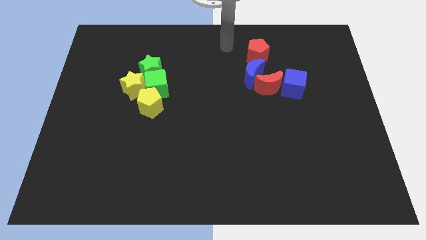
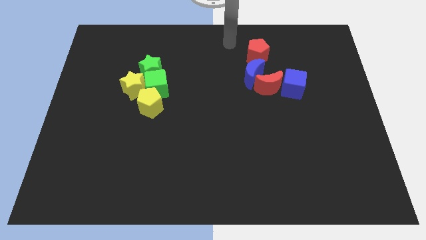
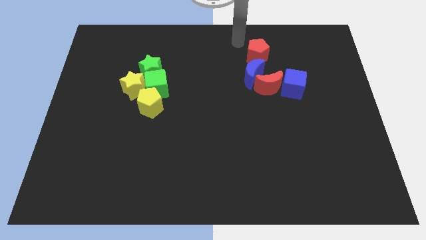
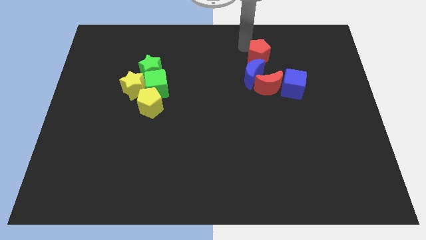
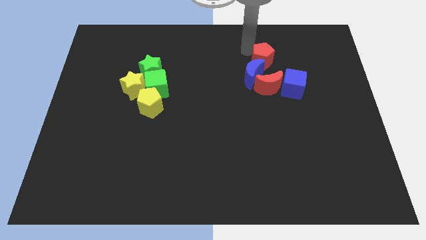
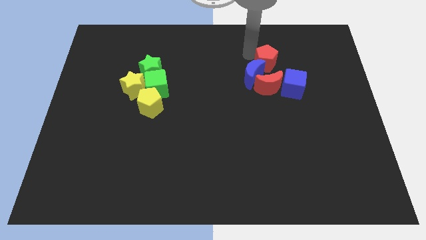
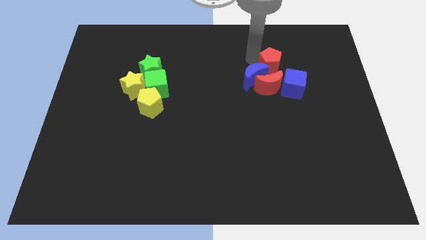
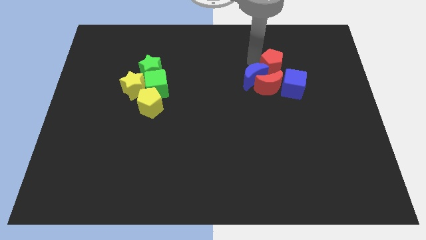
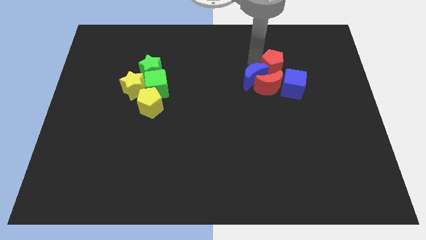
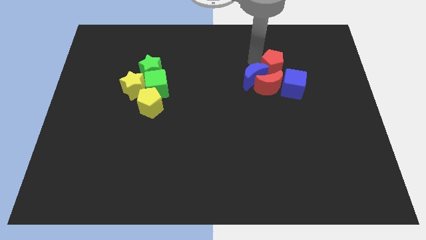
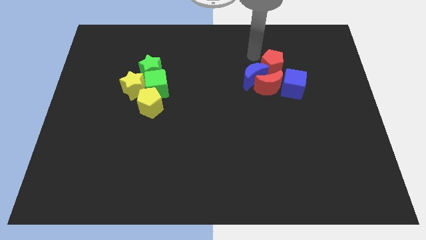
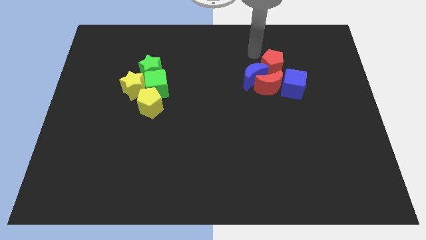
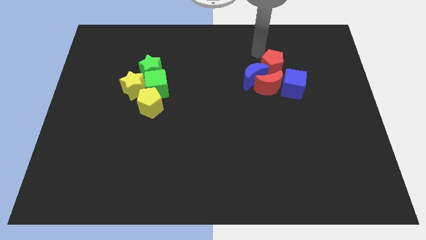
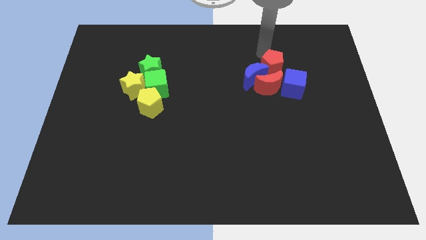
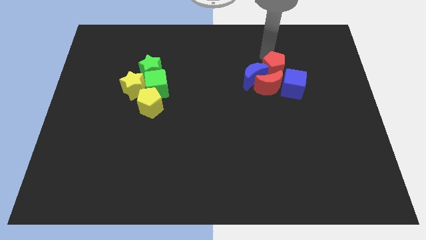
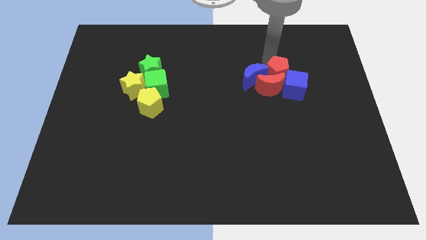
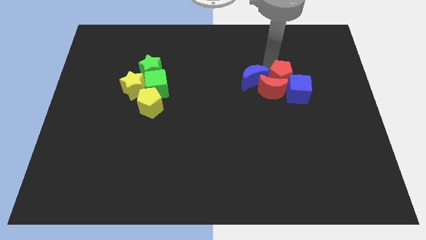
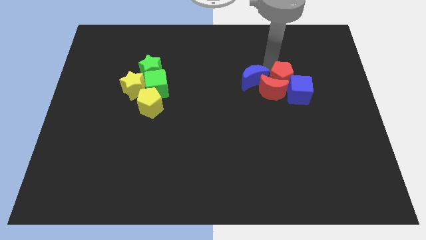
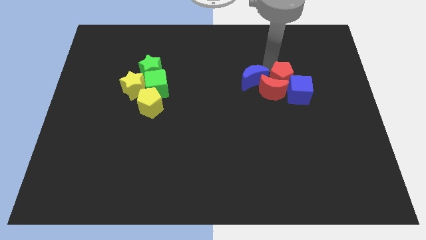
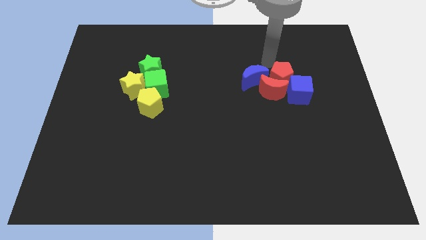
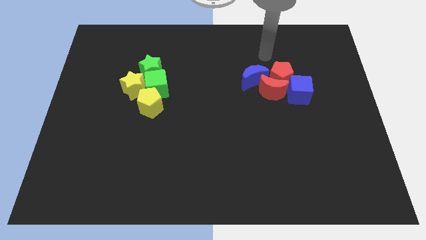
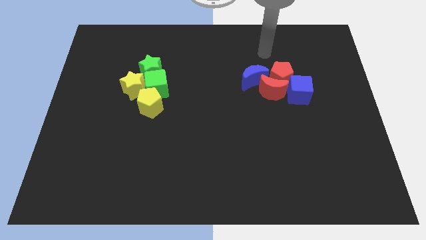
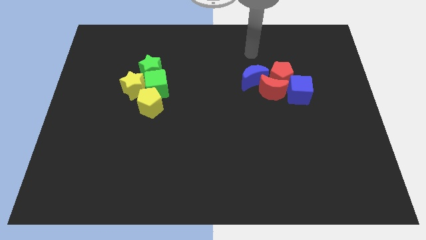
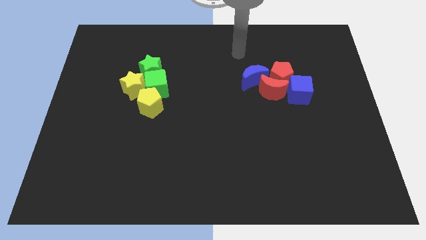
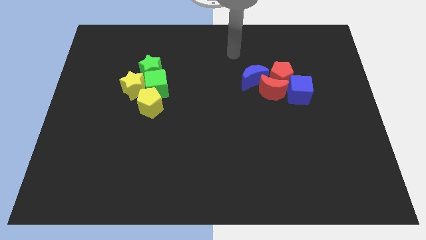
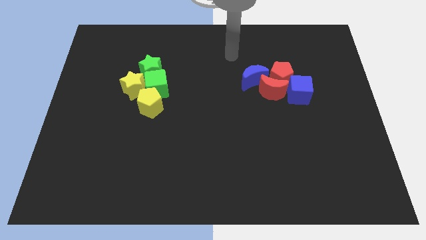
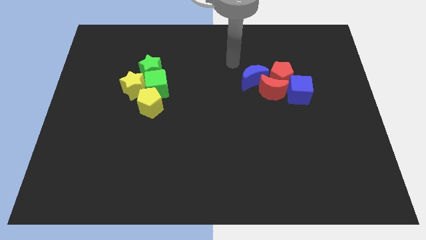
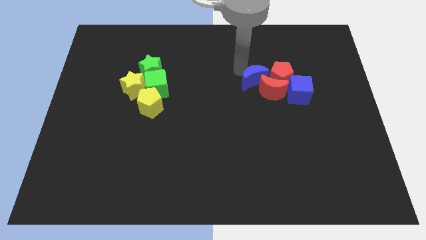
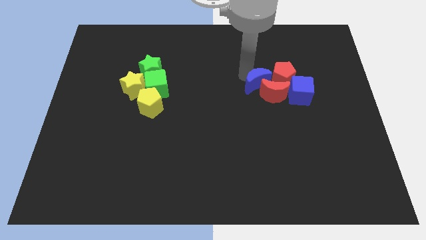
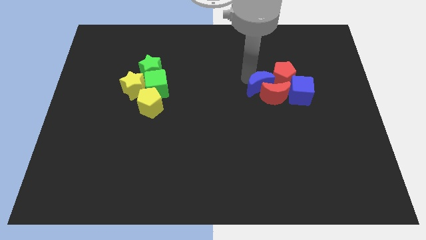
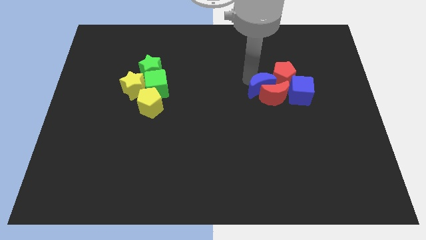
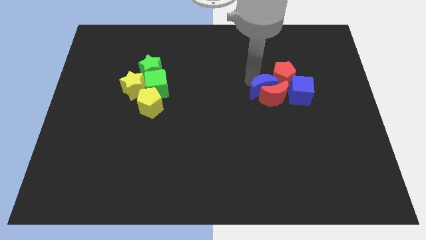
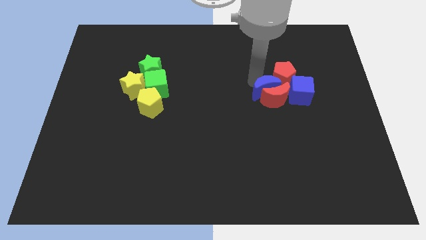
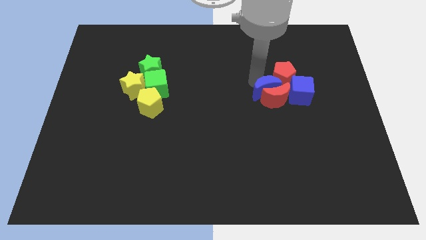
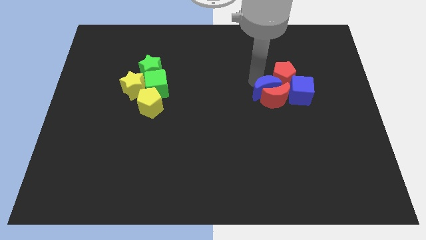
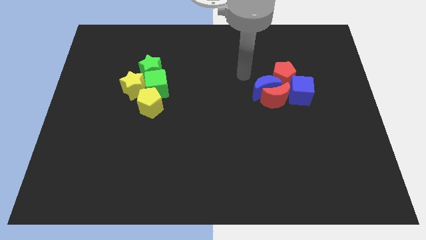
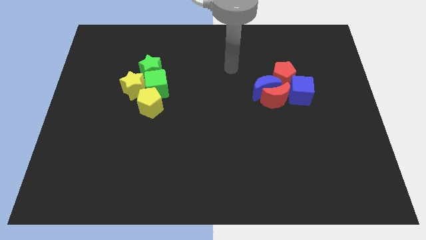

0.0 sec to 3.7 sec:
adjust the red and blue blocks at the right of the board

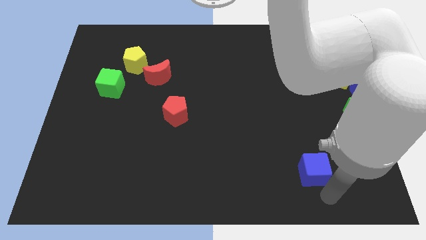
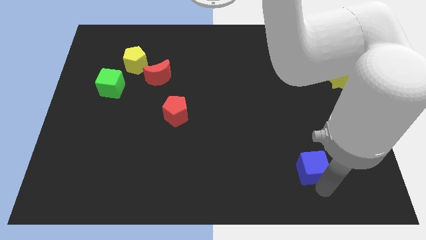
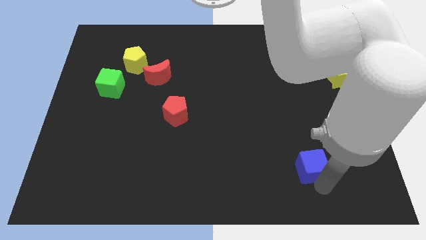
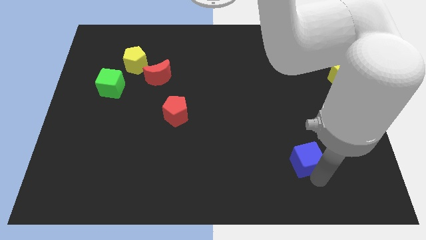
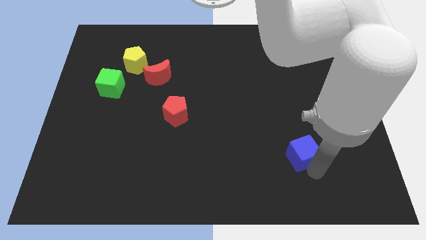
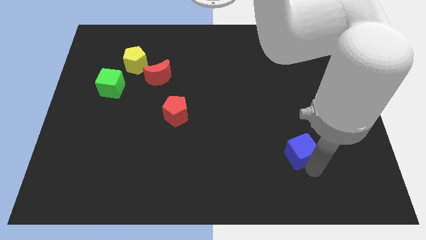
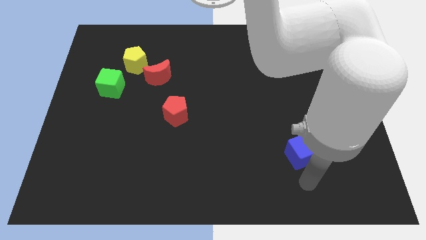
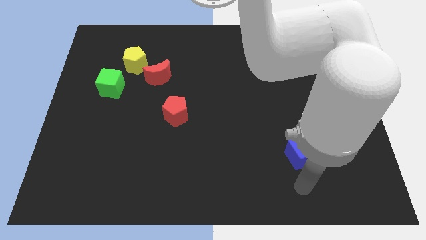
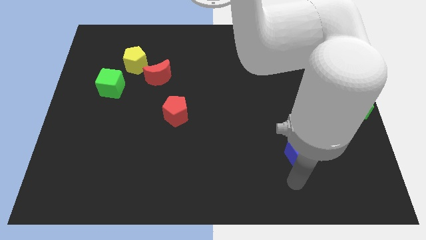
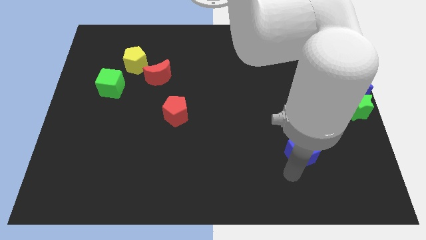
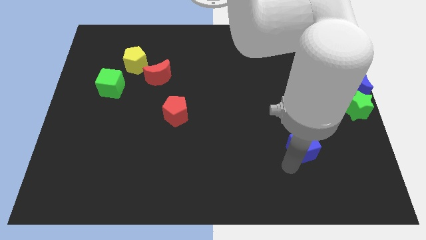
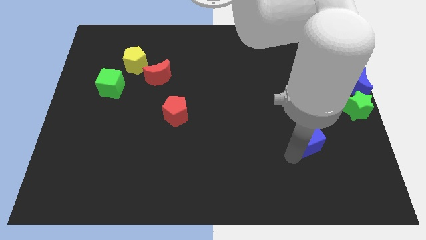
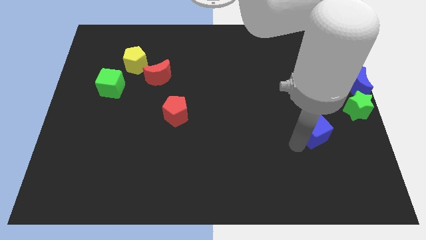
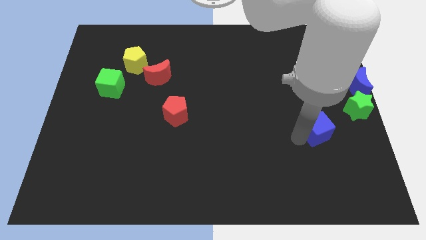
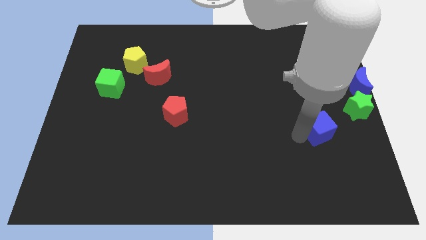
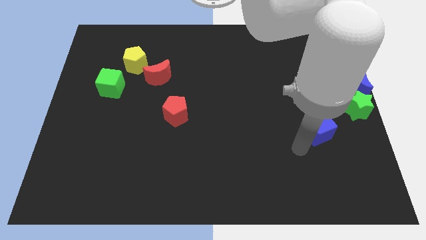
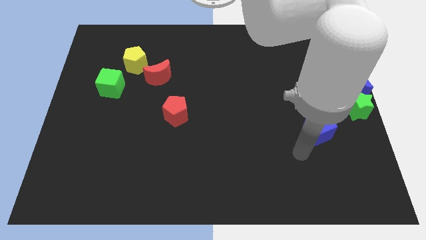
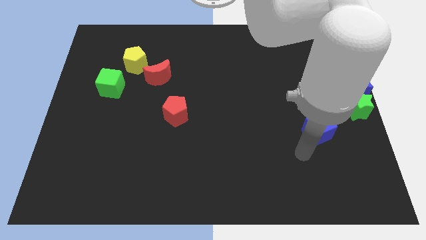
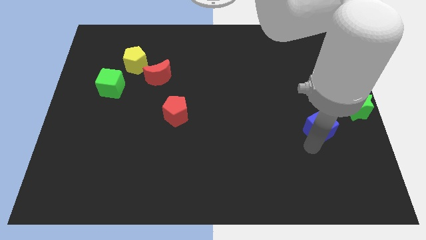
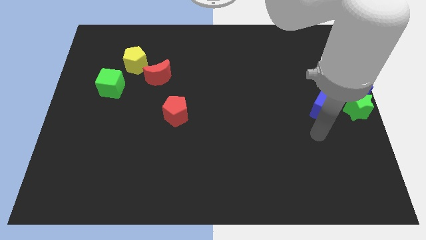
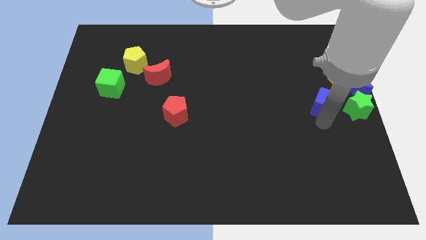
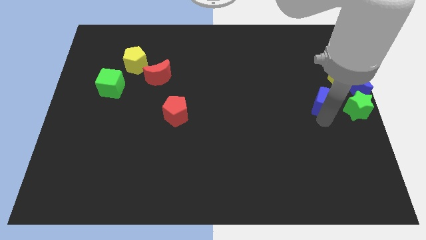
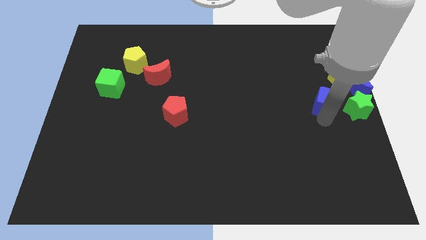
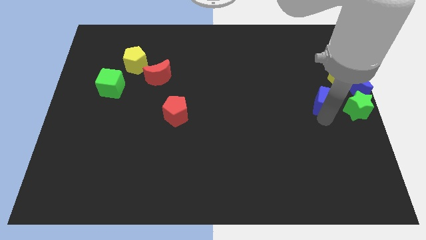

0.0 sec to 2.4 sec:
move the blue cube to the left of the green star

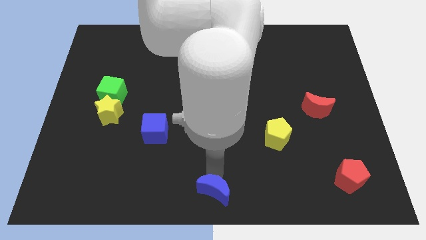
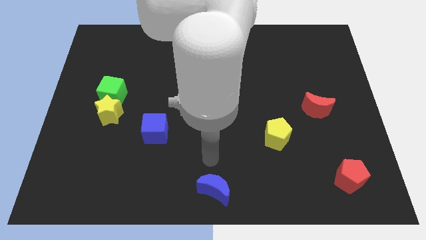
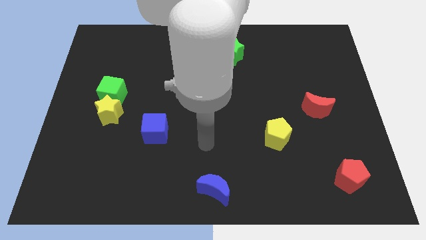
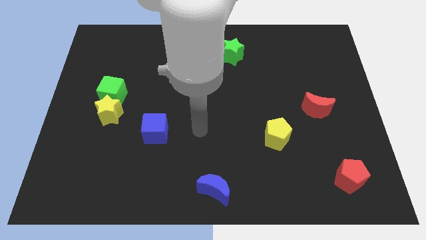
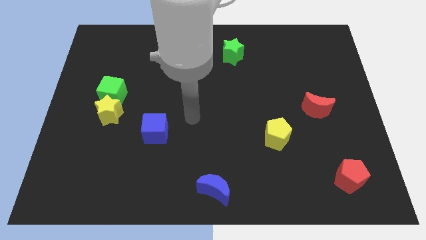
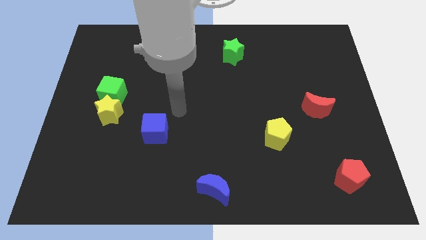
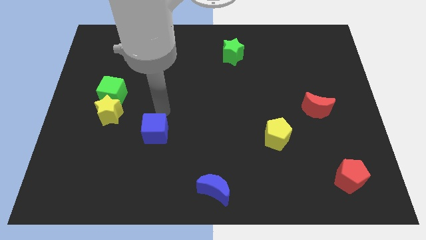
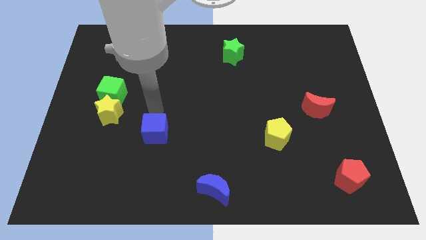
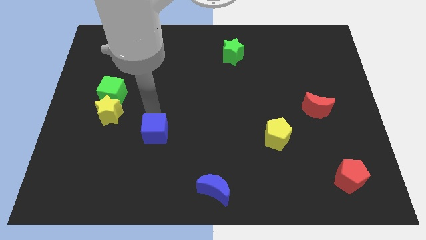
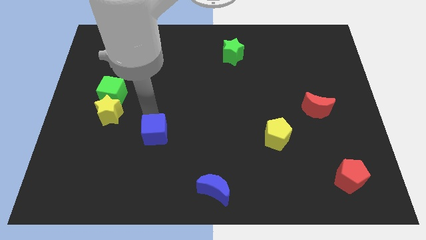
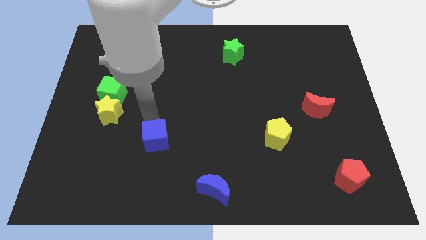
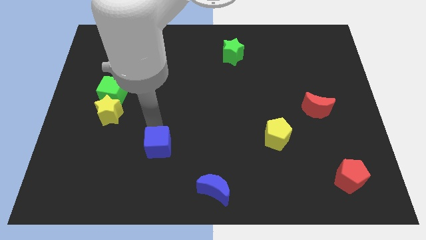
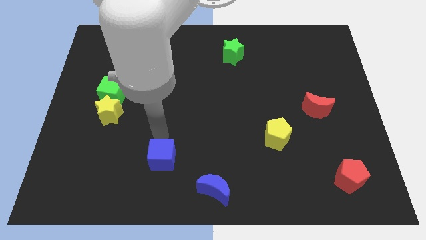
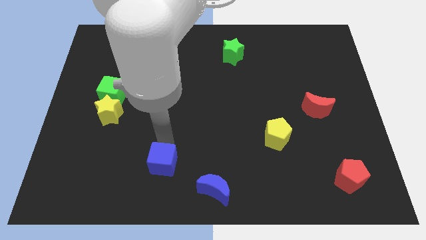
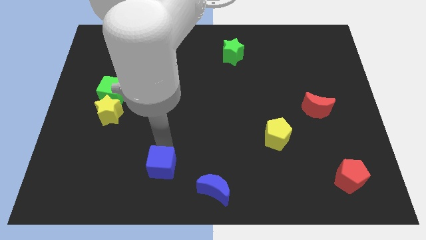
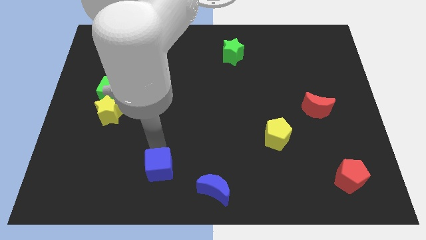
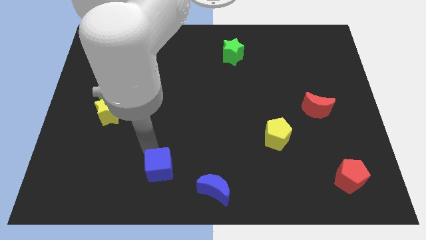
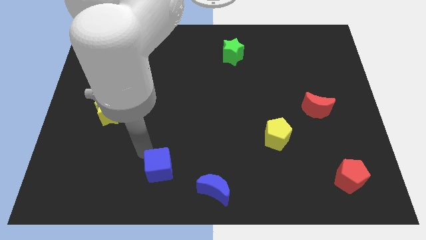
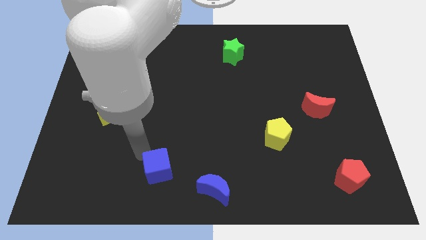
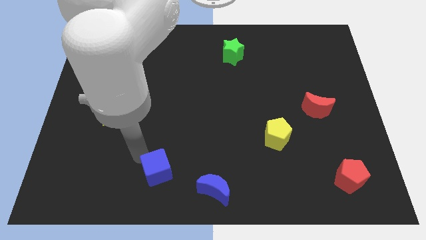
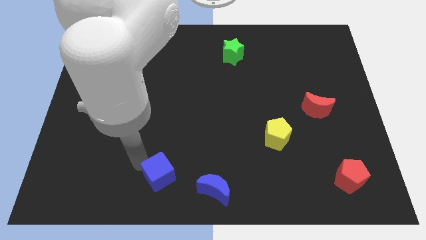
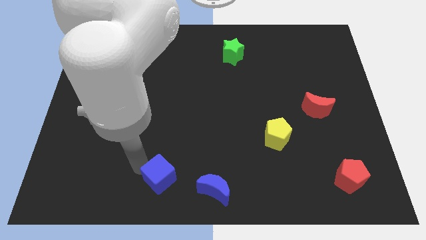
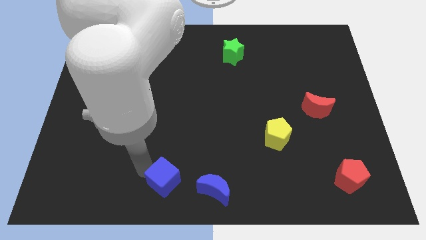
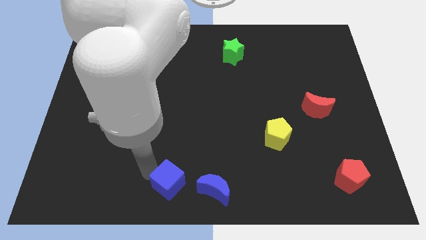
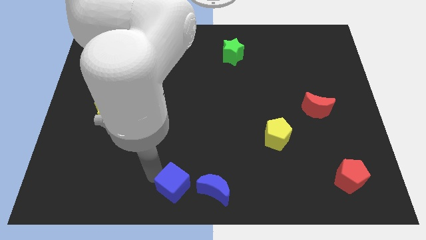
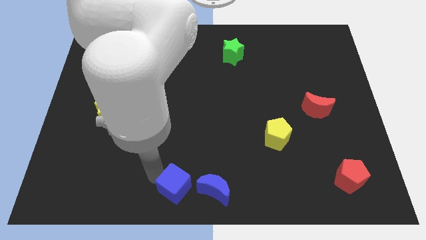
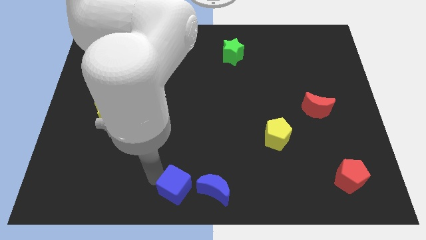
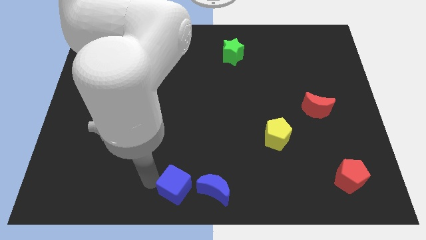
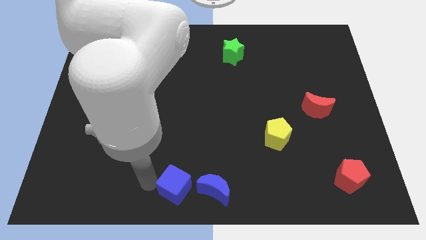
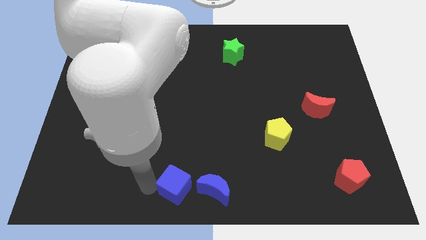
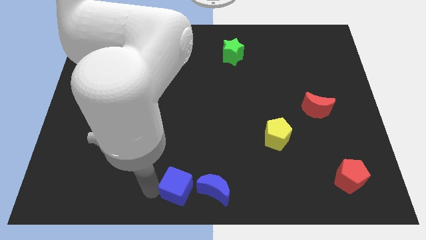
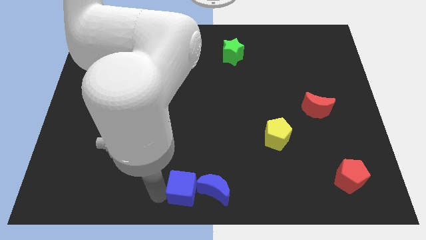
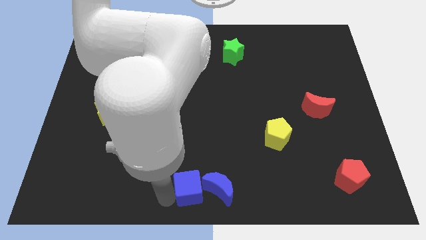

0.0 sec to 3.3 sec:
push the blue cube to the left of the blue crescent
